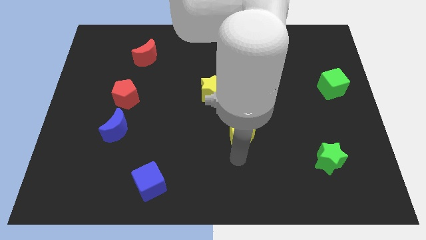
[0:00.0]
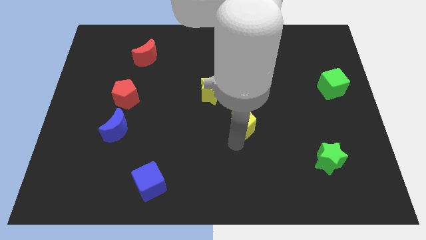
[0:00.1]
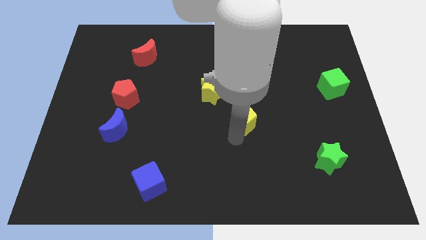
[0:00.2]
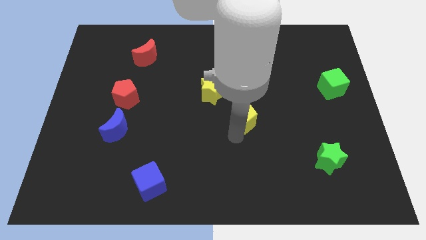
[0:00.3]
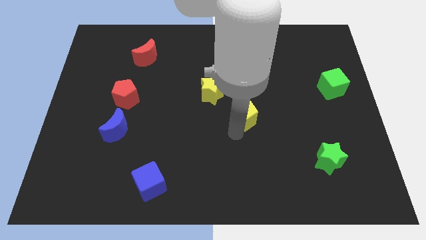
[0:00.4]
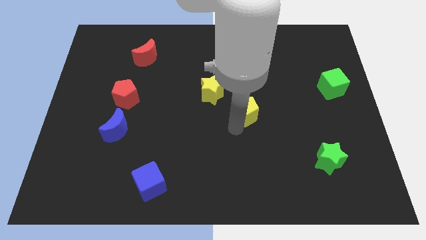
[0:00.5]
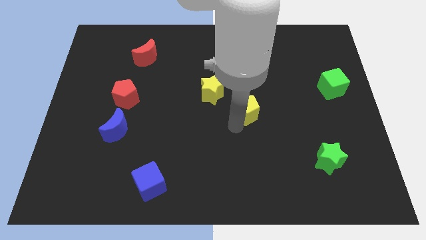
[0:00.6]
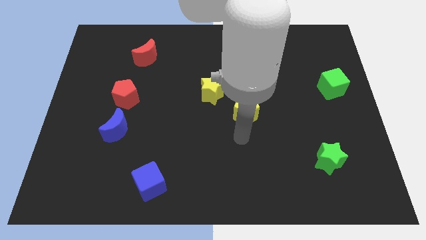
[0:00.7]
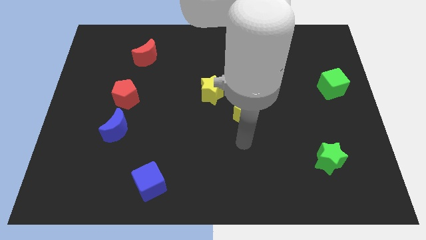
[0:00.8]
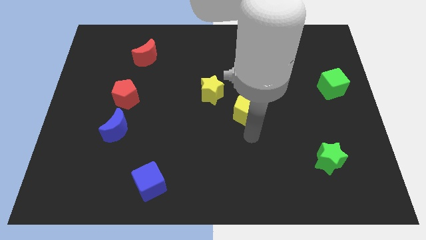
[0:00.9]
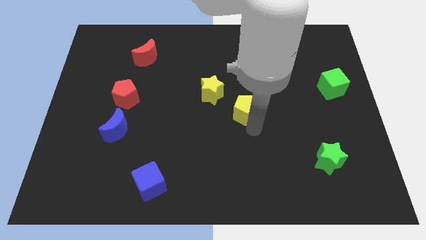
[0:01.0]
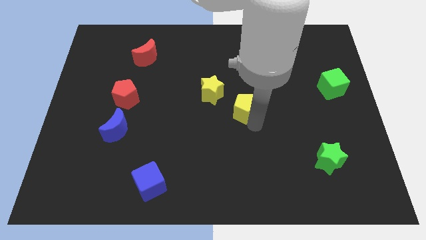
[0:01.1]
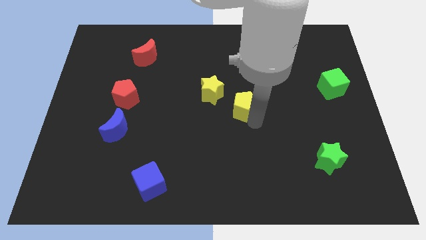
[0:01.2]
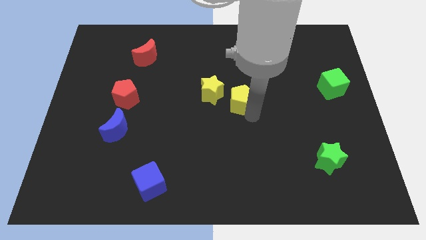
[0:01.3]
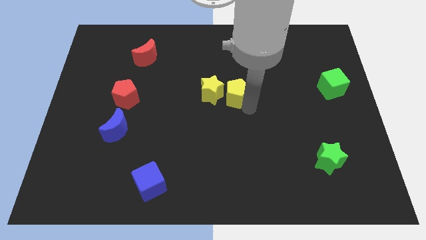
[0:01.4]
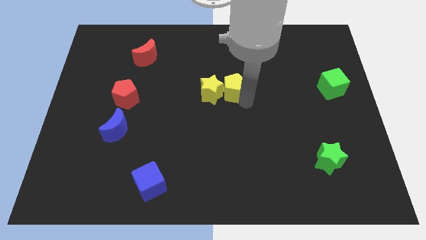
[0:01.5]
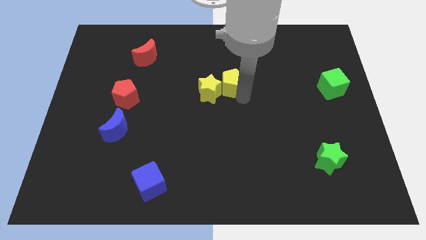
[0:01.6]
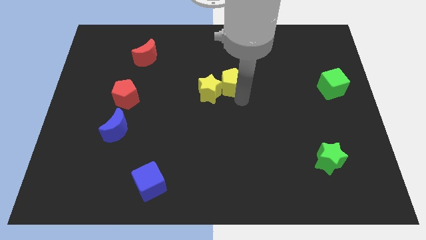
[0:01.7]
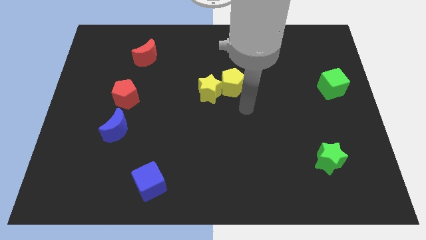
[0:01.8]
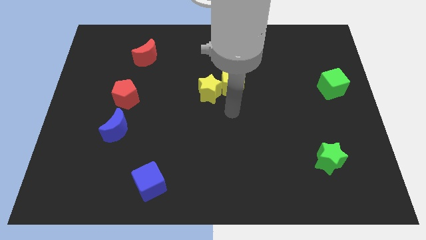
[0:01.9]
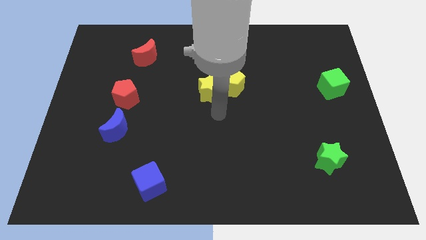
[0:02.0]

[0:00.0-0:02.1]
move the yellow pentagon into the yellow star

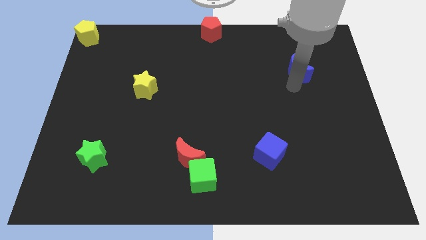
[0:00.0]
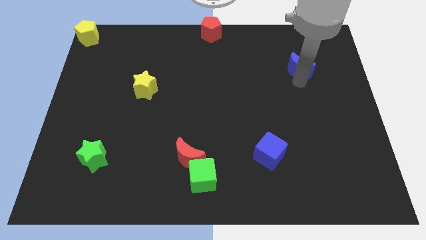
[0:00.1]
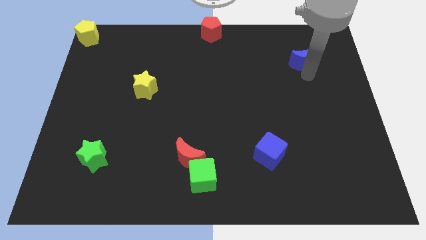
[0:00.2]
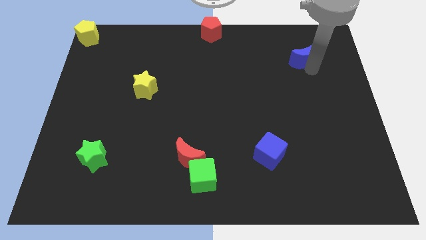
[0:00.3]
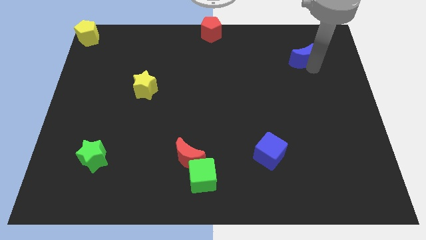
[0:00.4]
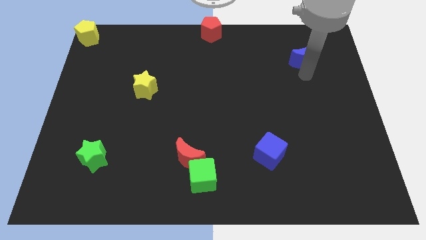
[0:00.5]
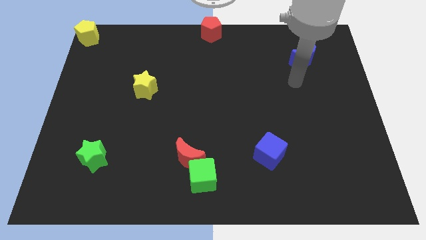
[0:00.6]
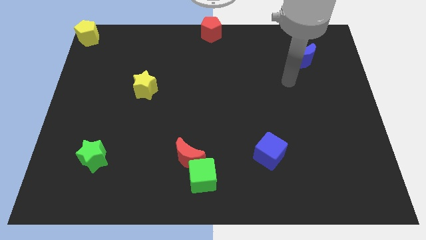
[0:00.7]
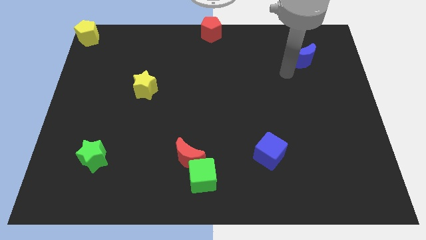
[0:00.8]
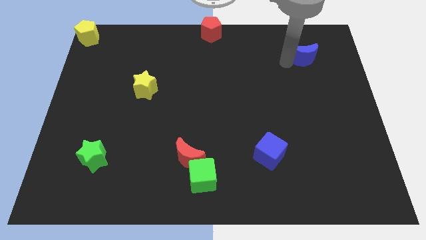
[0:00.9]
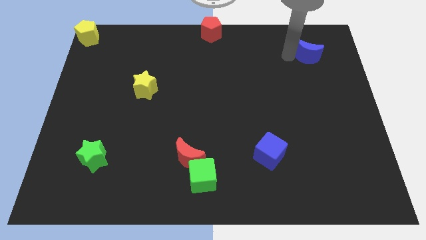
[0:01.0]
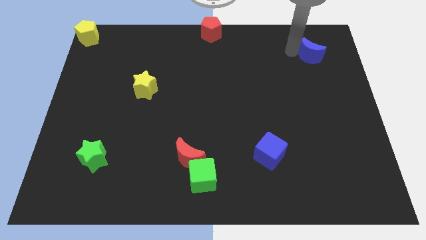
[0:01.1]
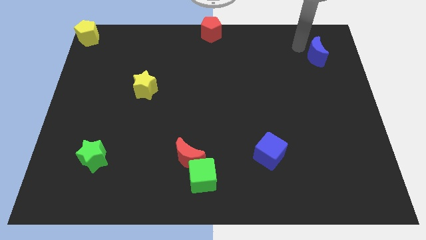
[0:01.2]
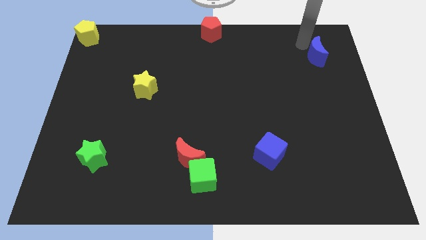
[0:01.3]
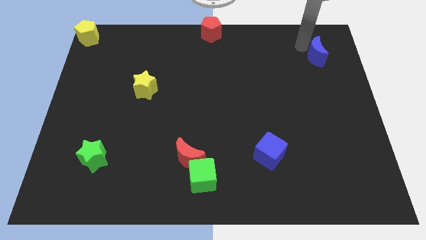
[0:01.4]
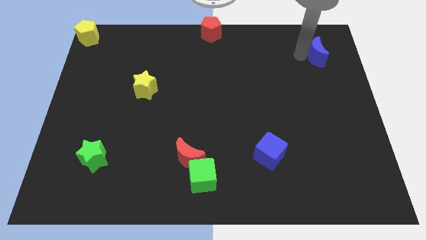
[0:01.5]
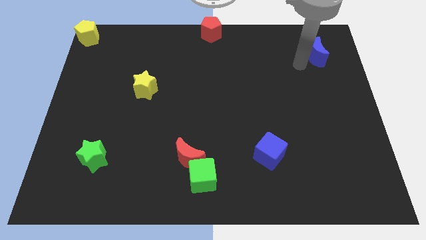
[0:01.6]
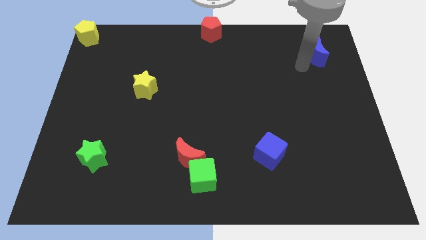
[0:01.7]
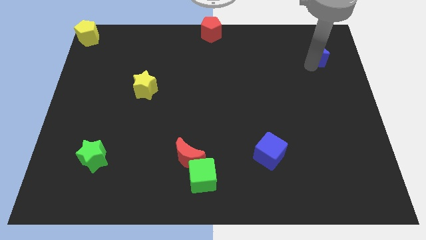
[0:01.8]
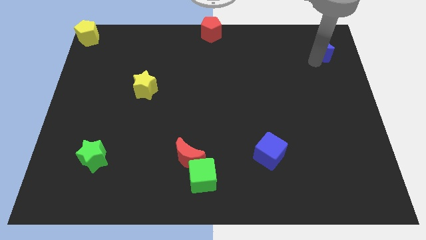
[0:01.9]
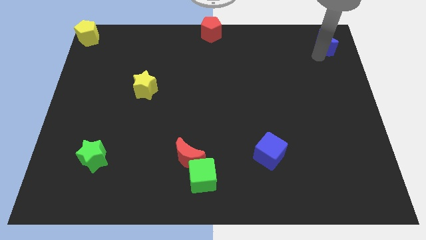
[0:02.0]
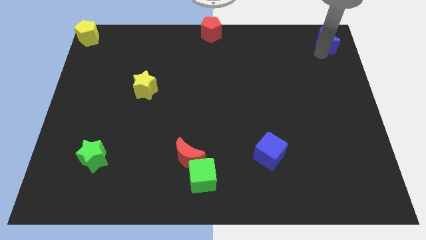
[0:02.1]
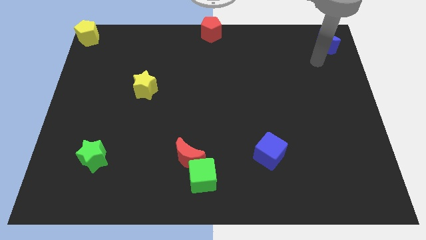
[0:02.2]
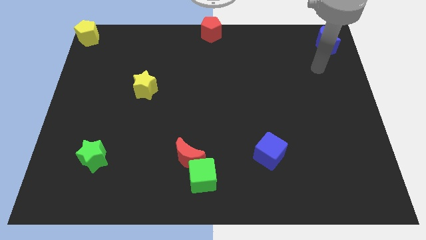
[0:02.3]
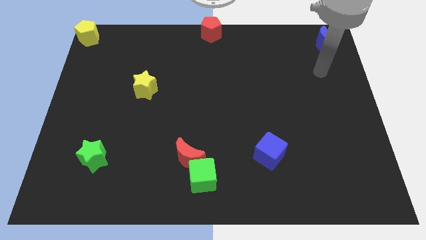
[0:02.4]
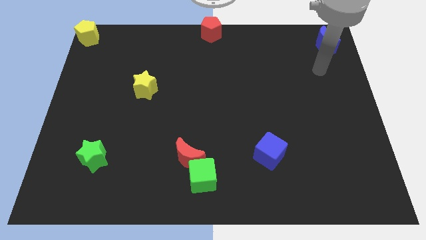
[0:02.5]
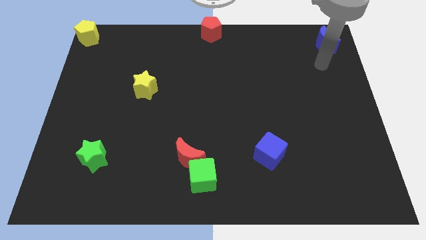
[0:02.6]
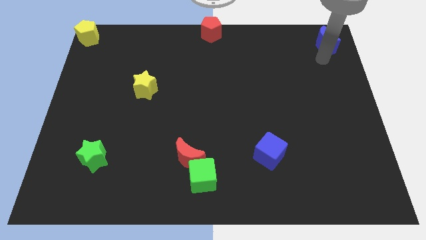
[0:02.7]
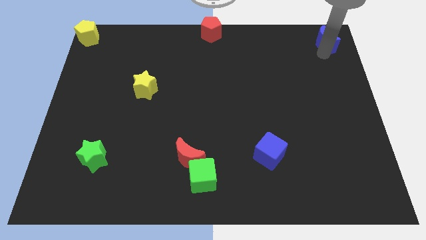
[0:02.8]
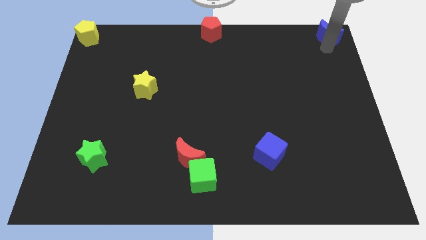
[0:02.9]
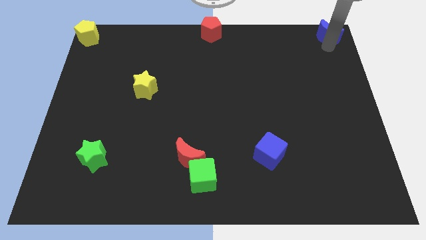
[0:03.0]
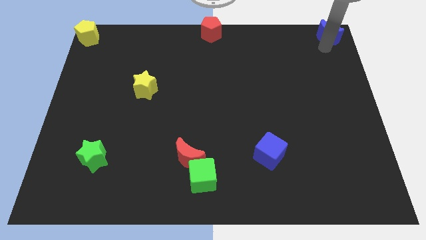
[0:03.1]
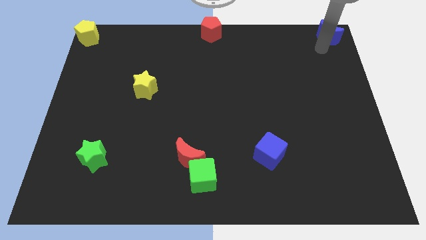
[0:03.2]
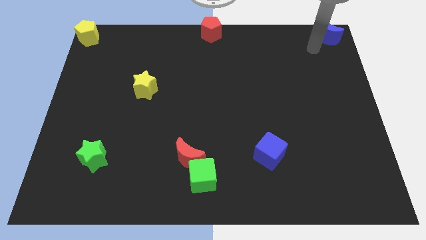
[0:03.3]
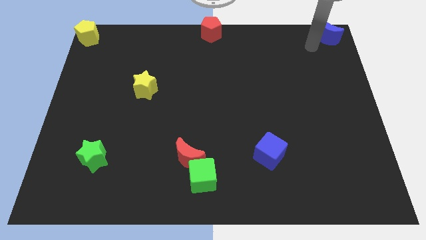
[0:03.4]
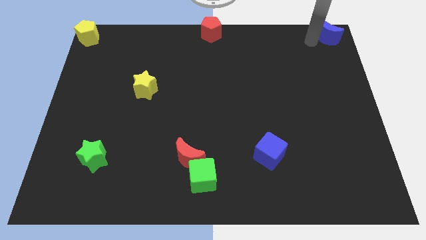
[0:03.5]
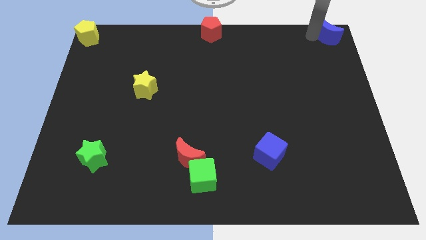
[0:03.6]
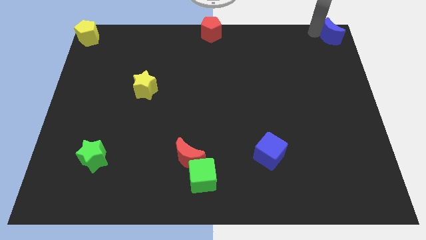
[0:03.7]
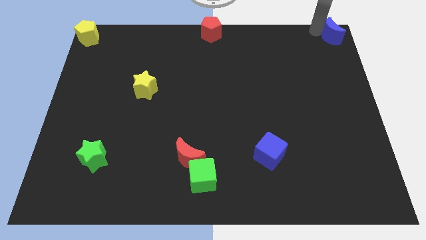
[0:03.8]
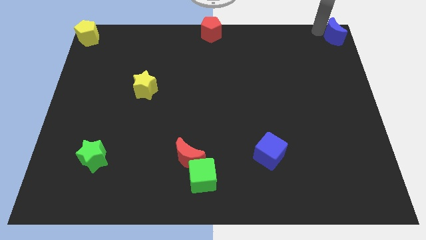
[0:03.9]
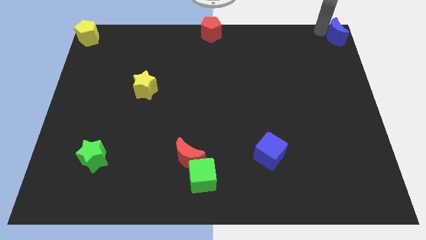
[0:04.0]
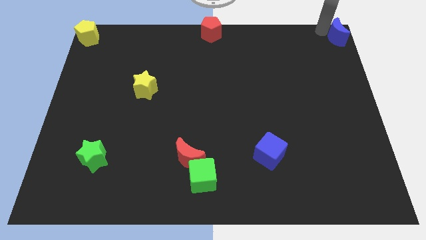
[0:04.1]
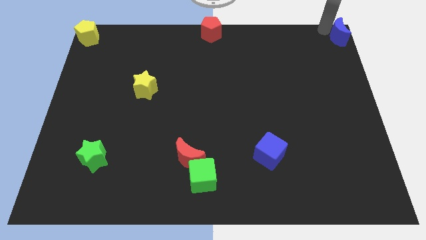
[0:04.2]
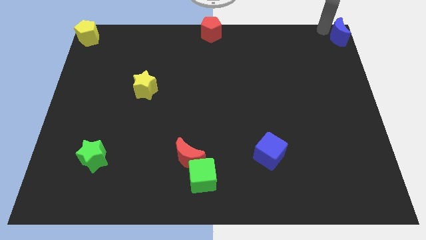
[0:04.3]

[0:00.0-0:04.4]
place the blue moon at the top right corner

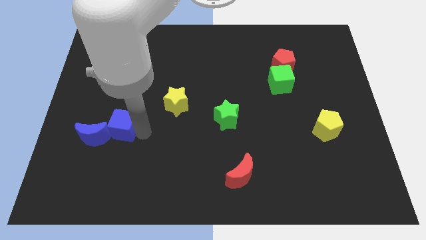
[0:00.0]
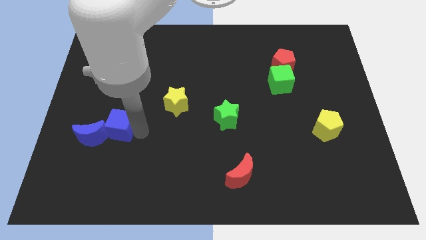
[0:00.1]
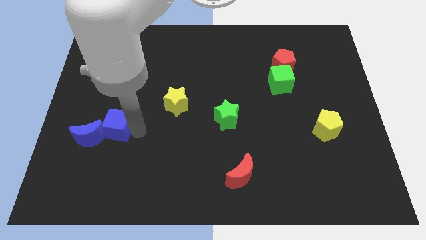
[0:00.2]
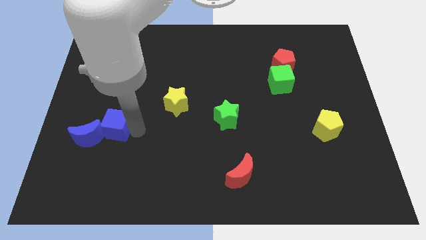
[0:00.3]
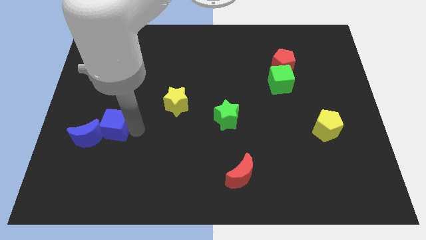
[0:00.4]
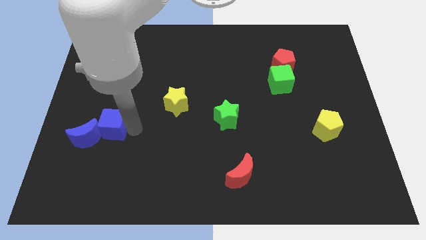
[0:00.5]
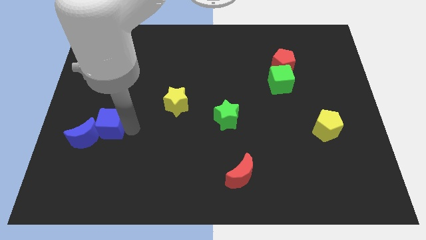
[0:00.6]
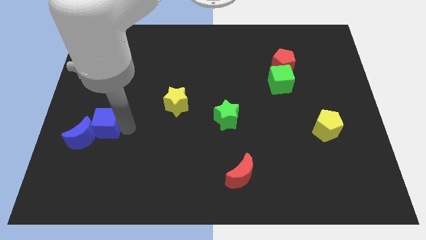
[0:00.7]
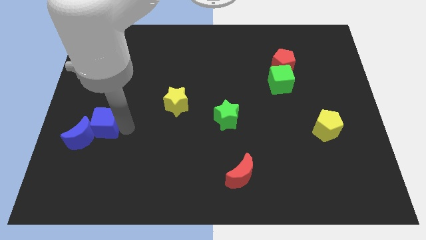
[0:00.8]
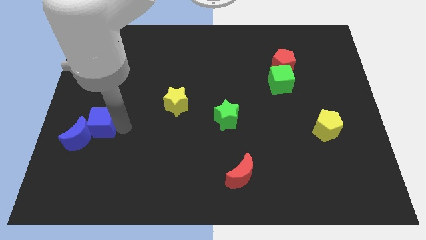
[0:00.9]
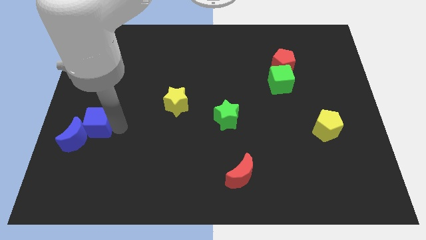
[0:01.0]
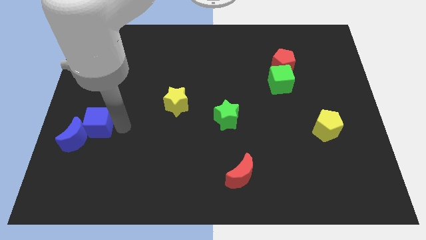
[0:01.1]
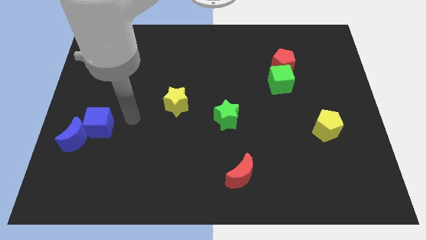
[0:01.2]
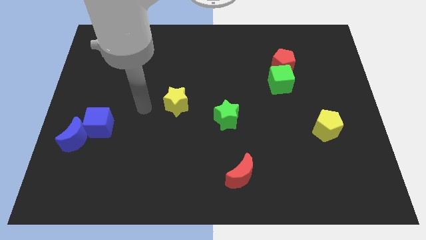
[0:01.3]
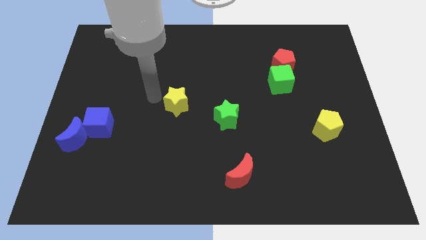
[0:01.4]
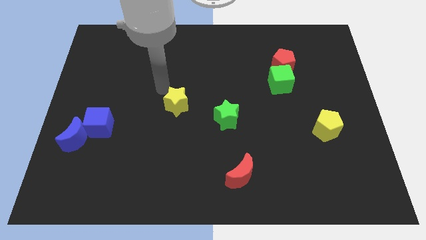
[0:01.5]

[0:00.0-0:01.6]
move the blue blocks slightly to the left side of the board

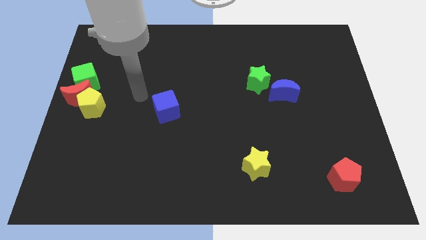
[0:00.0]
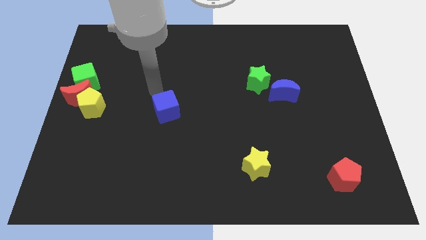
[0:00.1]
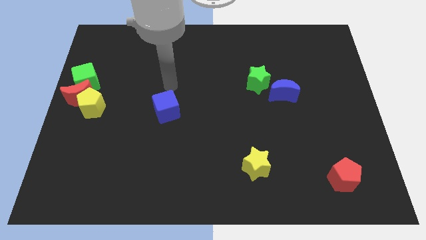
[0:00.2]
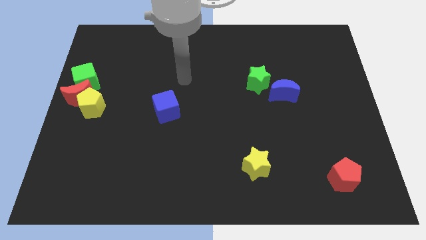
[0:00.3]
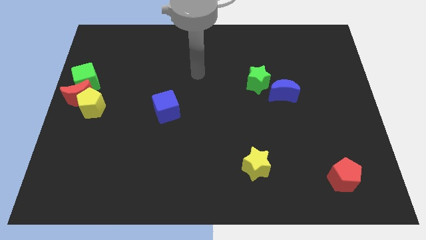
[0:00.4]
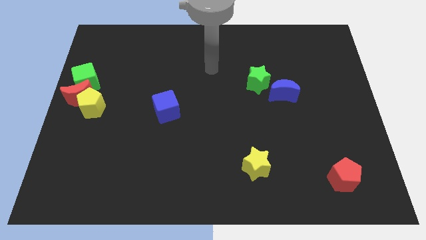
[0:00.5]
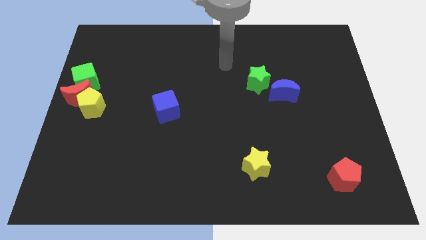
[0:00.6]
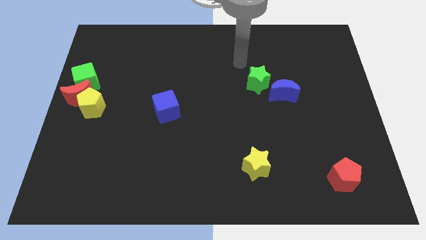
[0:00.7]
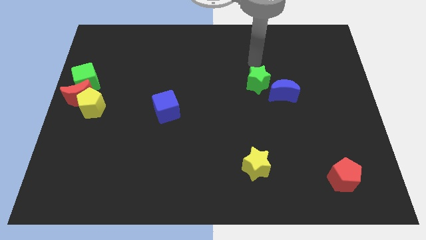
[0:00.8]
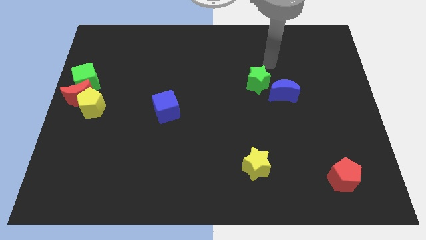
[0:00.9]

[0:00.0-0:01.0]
point your arm above green star
